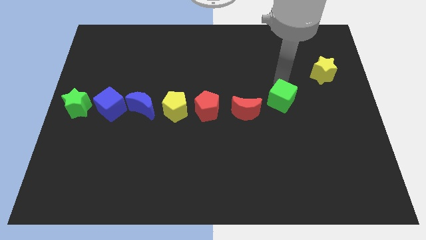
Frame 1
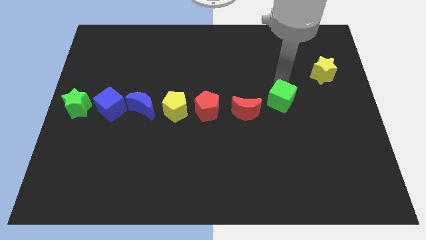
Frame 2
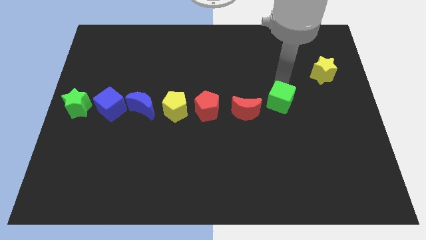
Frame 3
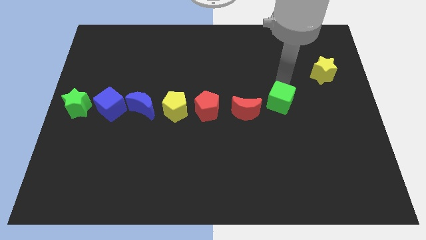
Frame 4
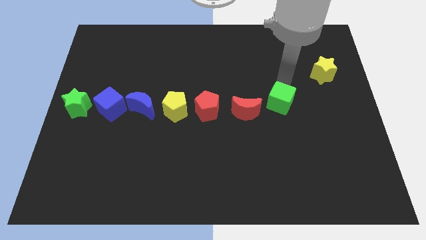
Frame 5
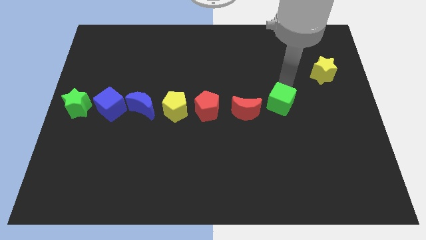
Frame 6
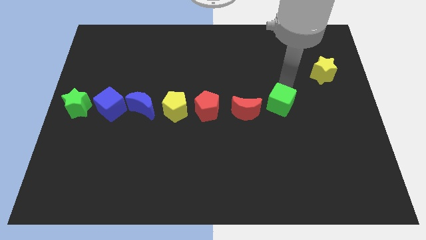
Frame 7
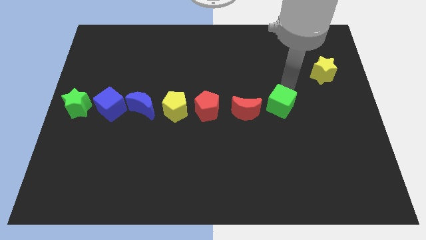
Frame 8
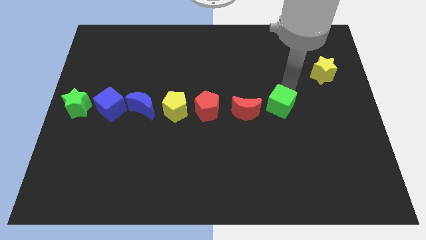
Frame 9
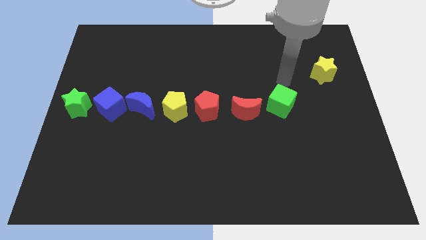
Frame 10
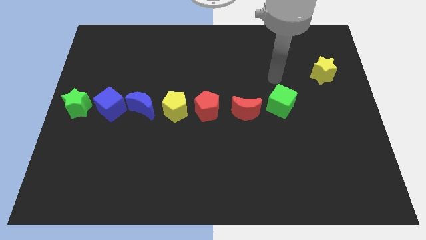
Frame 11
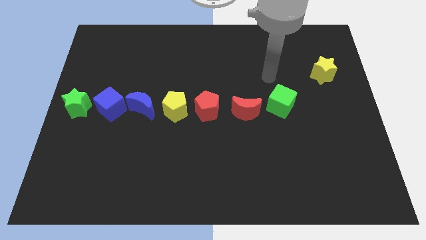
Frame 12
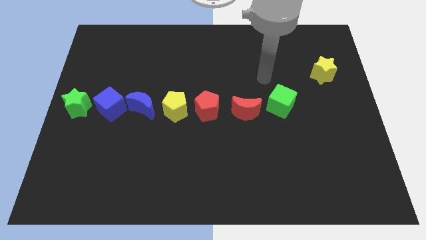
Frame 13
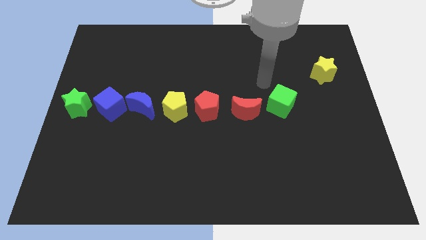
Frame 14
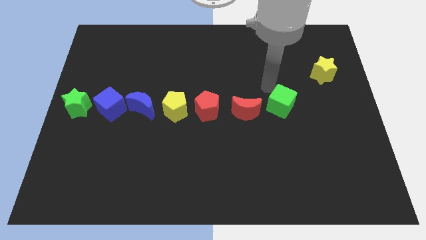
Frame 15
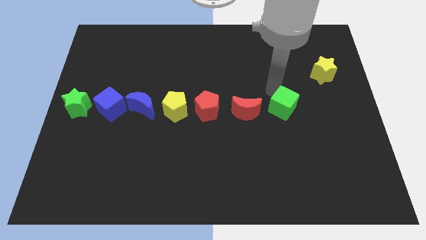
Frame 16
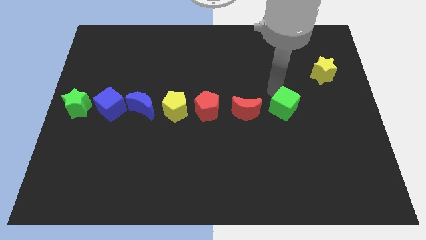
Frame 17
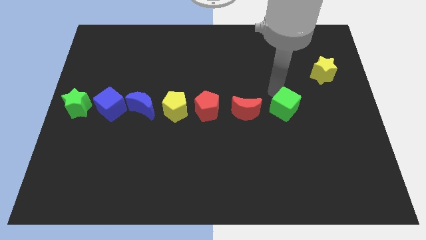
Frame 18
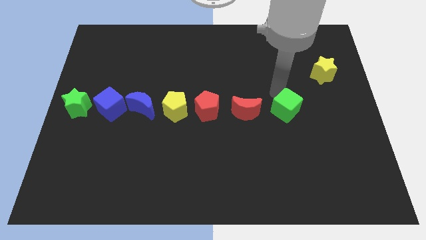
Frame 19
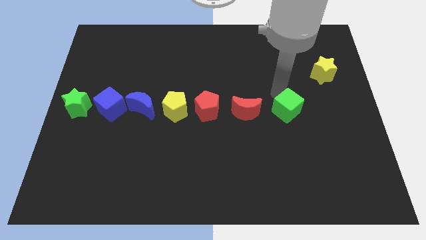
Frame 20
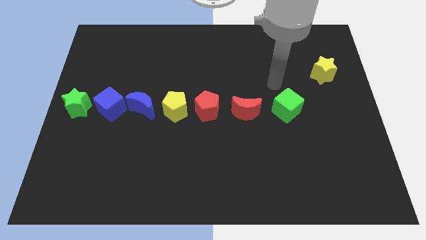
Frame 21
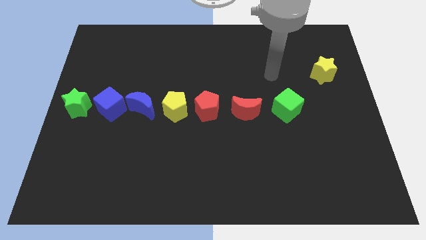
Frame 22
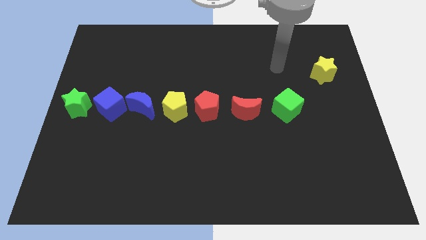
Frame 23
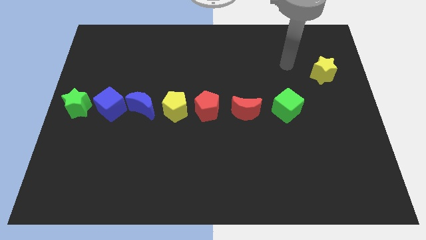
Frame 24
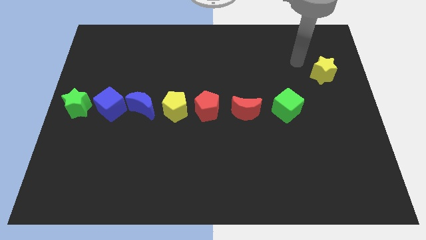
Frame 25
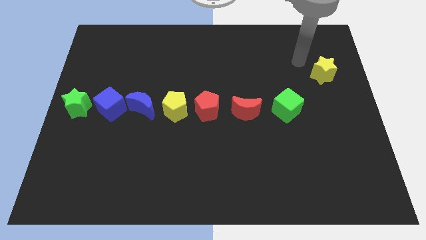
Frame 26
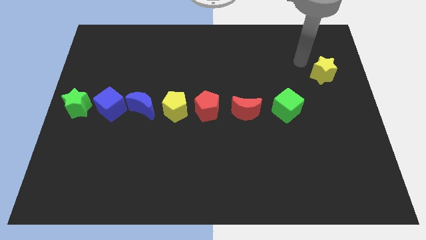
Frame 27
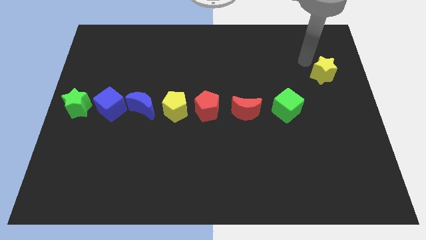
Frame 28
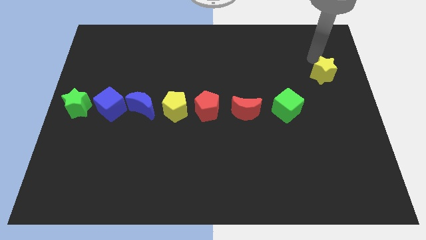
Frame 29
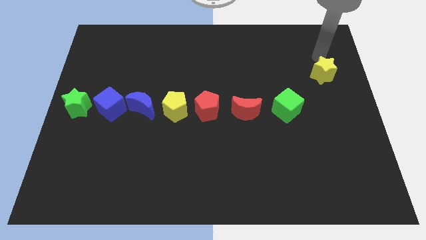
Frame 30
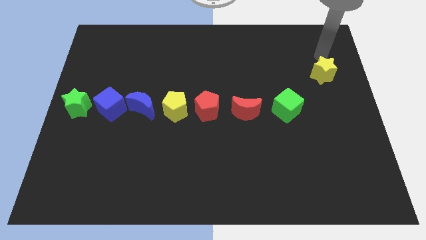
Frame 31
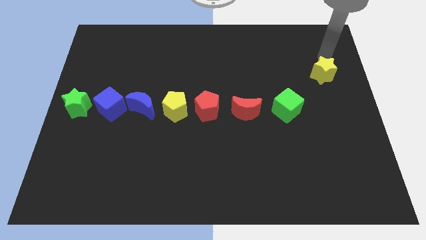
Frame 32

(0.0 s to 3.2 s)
push the green cube slightly downward

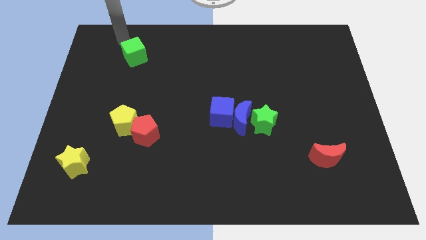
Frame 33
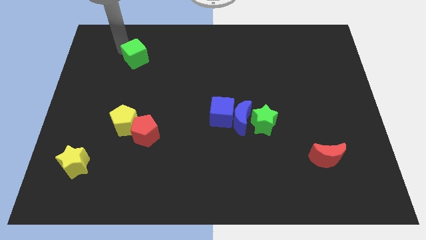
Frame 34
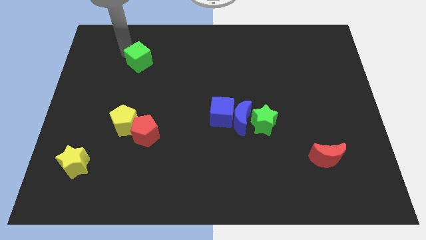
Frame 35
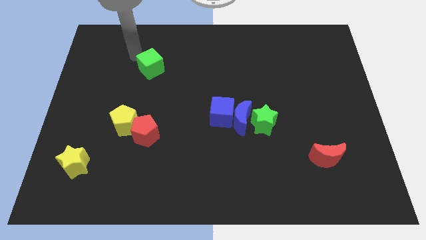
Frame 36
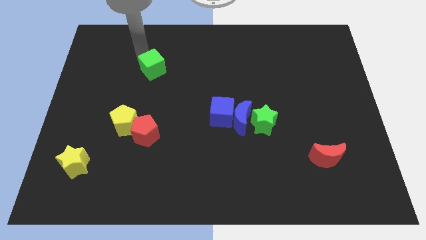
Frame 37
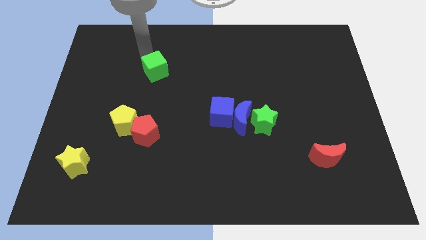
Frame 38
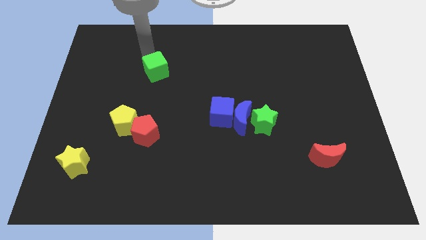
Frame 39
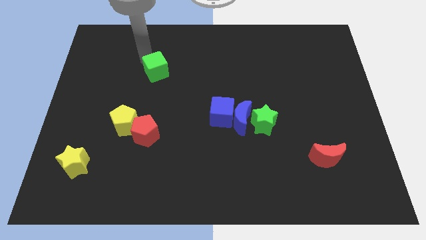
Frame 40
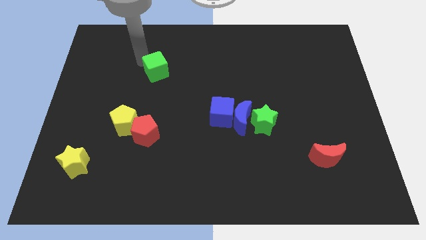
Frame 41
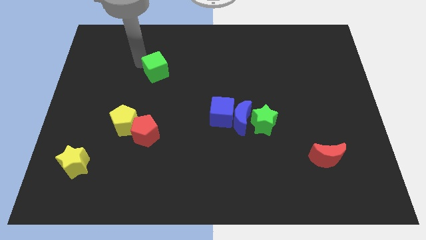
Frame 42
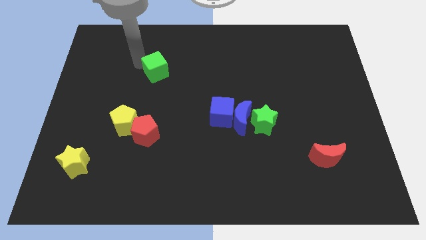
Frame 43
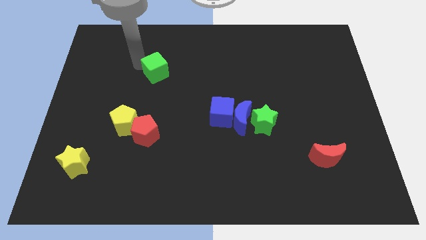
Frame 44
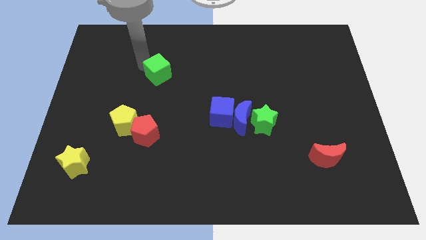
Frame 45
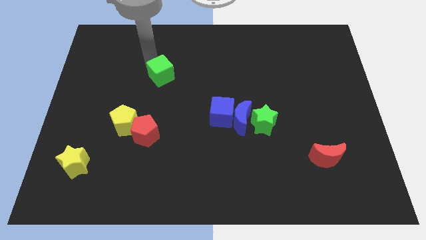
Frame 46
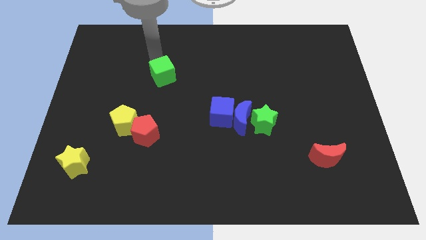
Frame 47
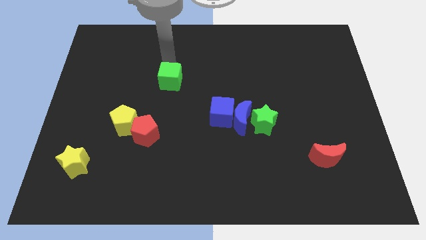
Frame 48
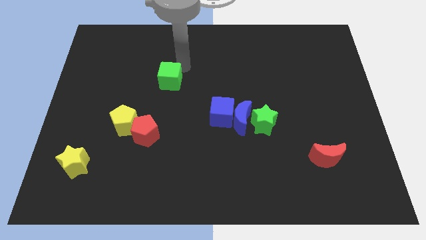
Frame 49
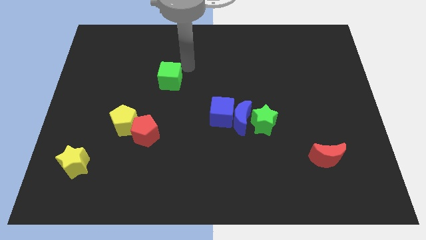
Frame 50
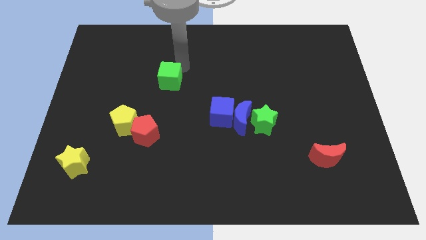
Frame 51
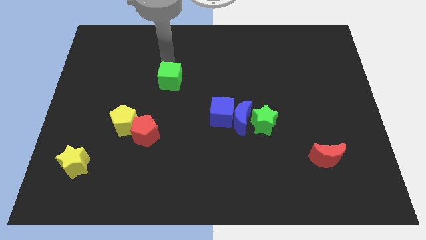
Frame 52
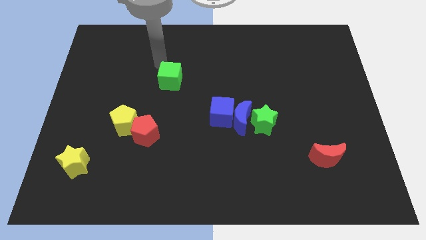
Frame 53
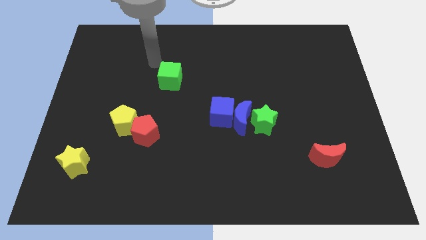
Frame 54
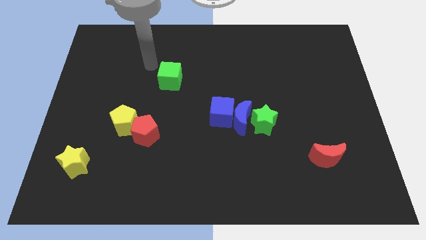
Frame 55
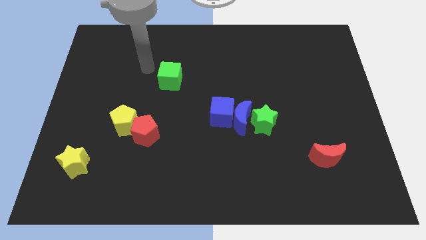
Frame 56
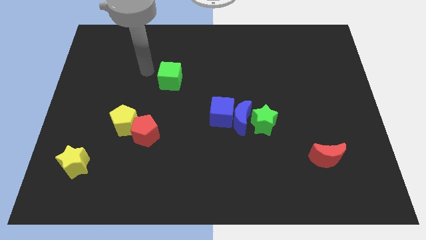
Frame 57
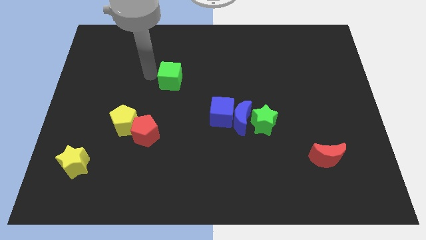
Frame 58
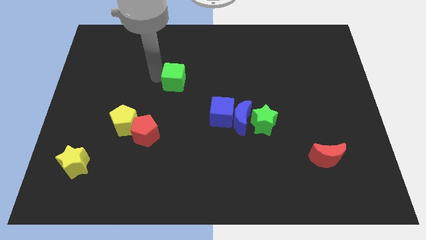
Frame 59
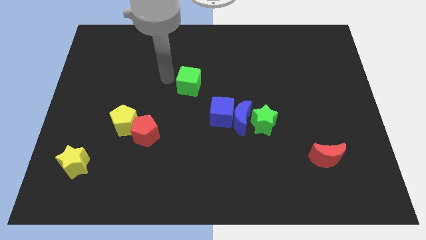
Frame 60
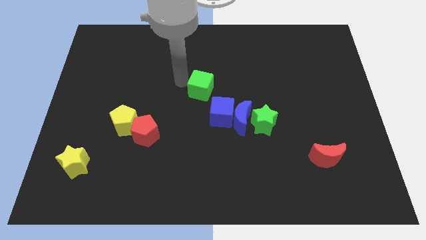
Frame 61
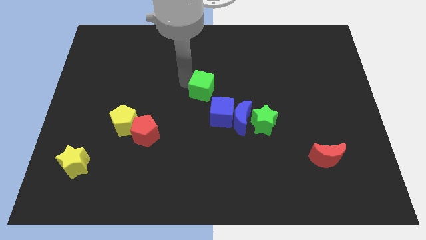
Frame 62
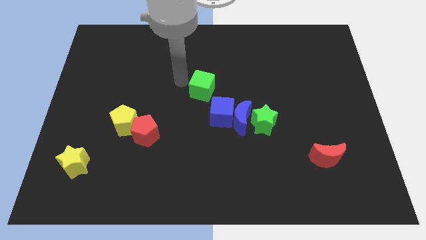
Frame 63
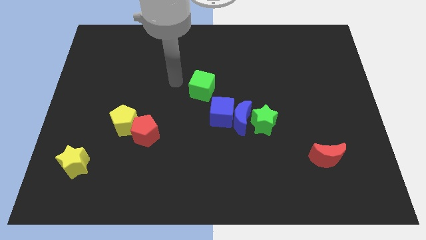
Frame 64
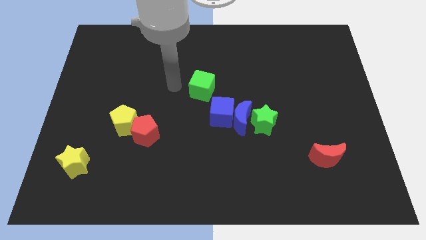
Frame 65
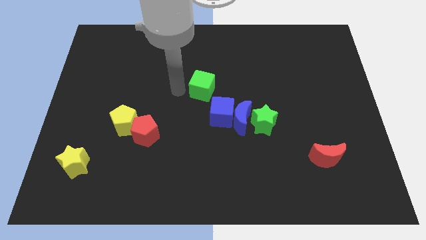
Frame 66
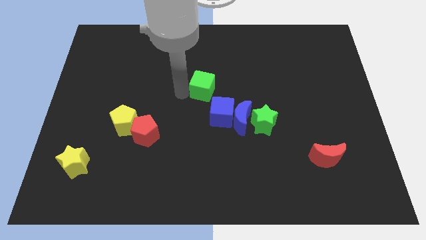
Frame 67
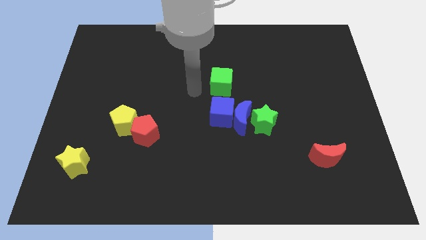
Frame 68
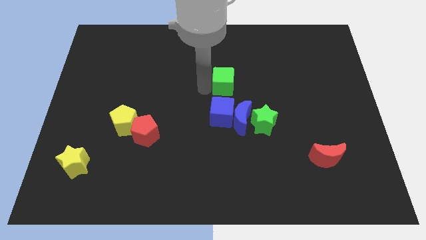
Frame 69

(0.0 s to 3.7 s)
place the green cube to the top of the blue cube

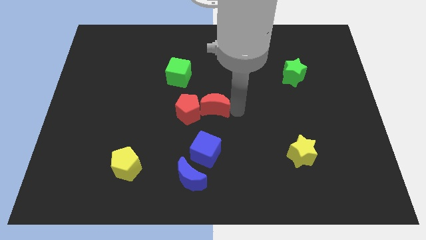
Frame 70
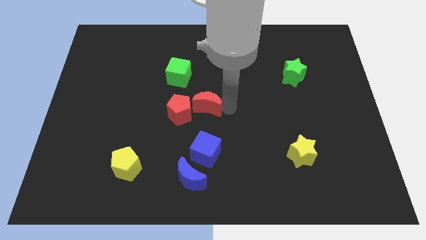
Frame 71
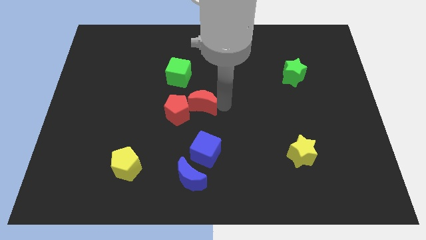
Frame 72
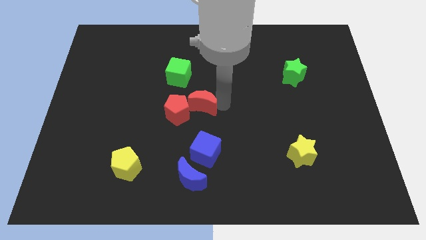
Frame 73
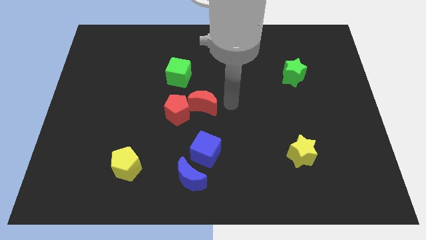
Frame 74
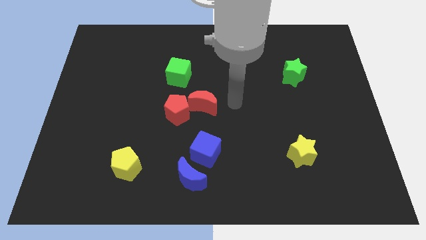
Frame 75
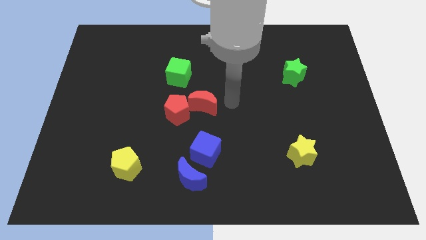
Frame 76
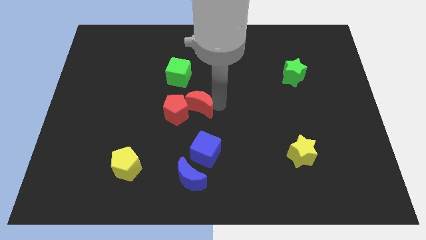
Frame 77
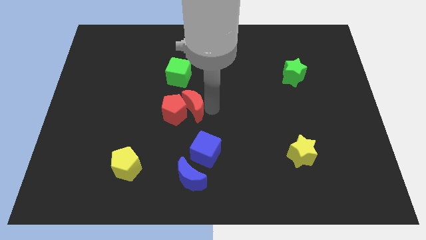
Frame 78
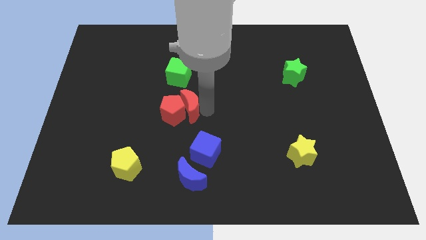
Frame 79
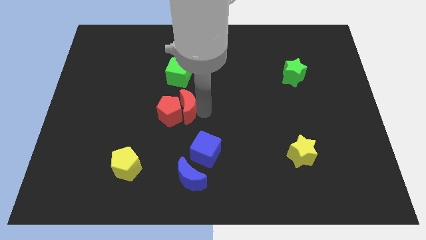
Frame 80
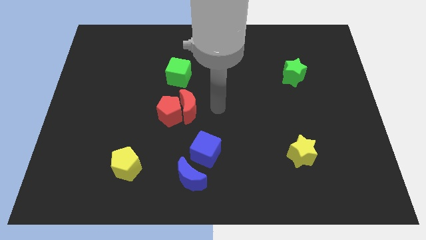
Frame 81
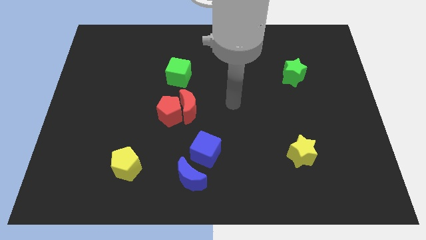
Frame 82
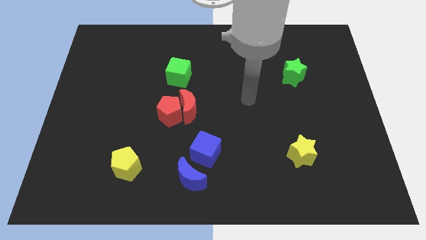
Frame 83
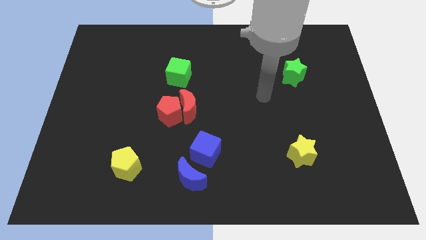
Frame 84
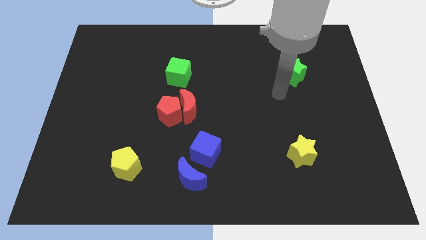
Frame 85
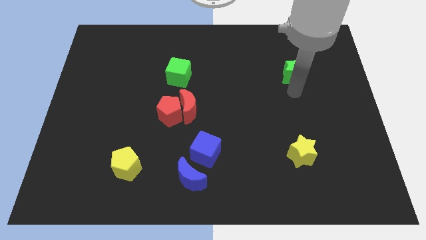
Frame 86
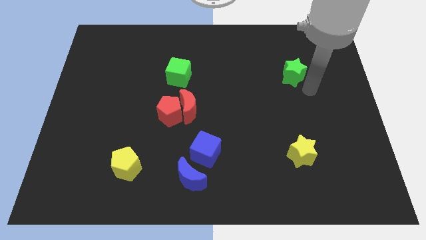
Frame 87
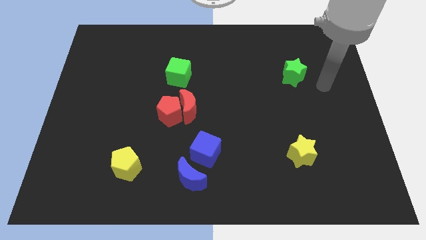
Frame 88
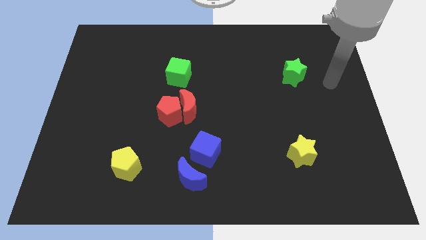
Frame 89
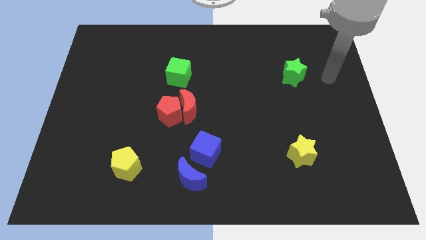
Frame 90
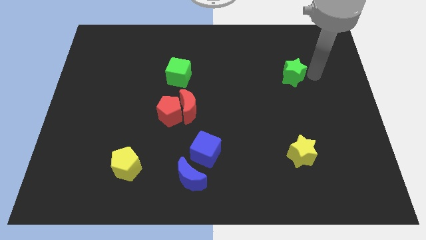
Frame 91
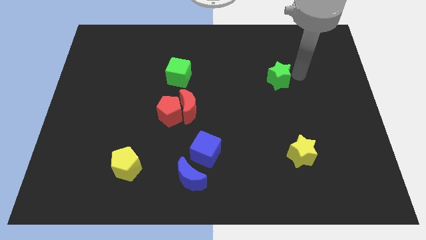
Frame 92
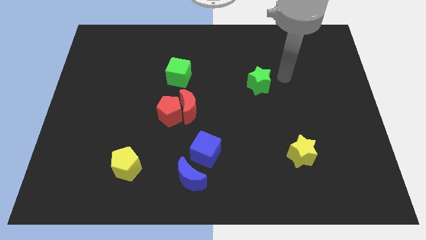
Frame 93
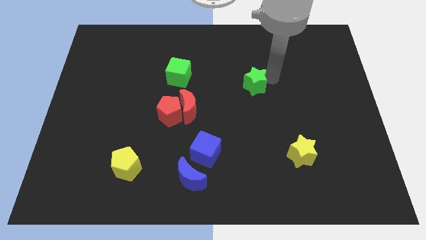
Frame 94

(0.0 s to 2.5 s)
push the red moon and green star slightly to the left
